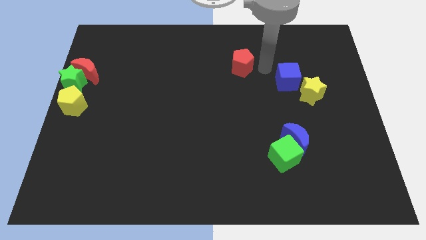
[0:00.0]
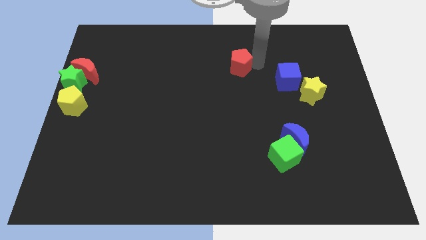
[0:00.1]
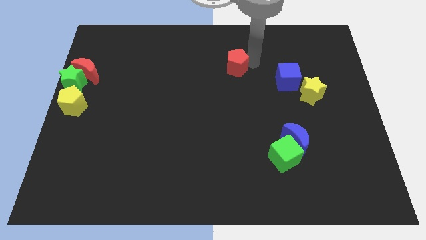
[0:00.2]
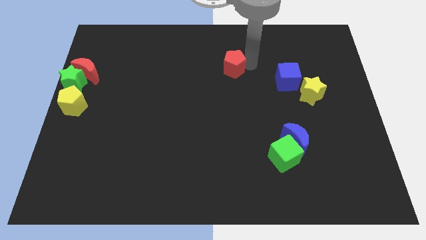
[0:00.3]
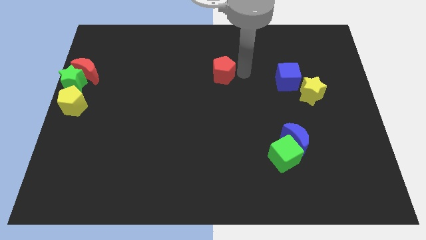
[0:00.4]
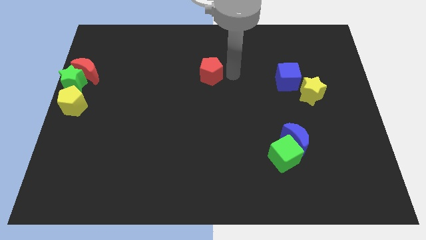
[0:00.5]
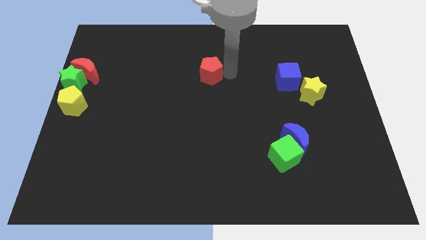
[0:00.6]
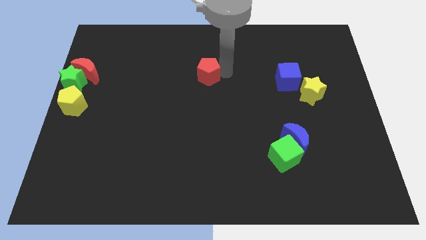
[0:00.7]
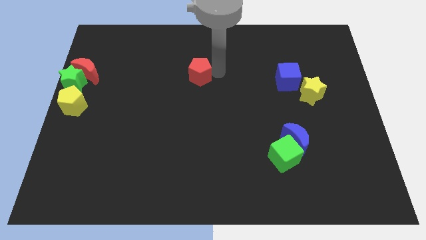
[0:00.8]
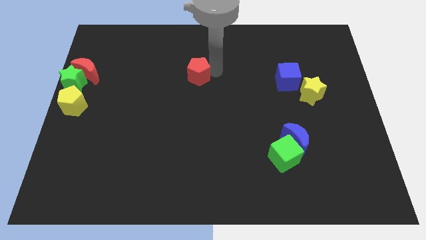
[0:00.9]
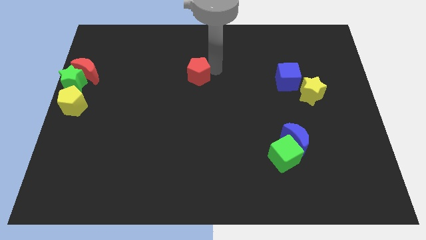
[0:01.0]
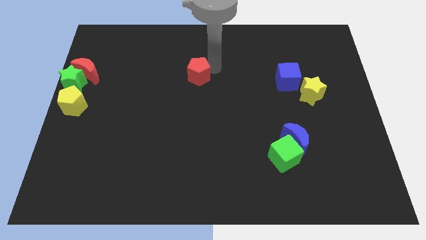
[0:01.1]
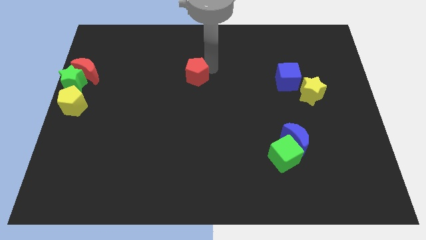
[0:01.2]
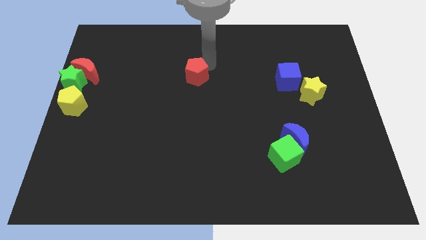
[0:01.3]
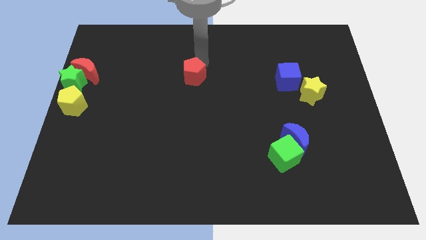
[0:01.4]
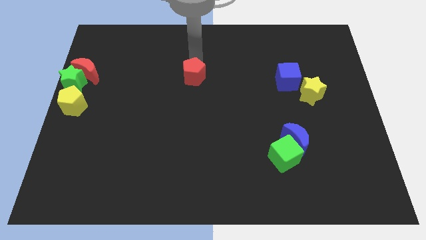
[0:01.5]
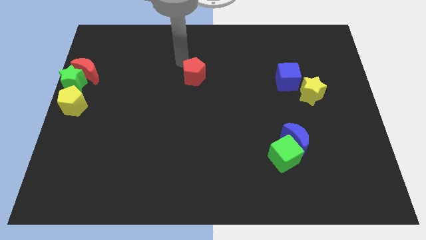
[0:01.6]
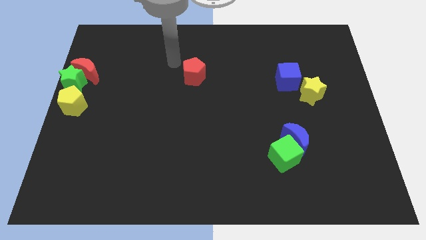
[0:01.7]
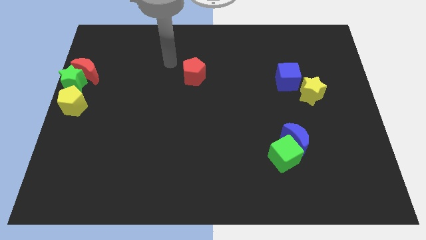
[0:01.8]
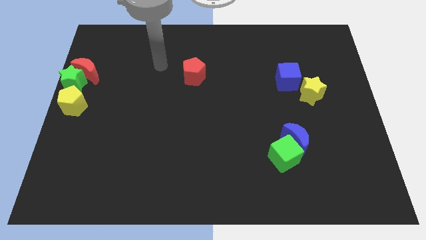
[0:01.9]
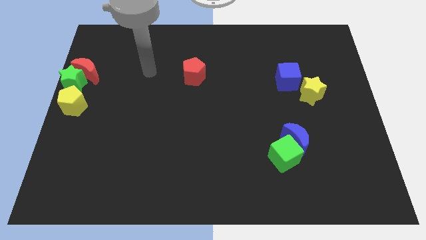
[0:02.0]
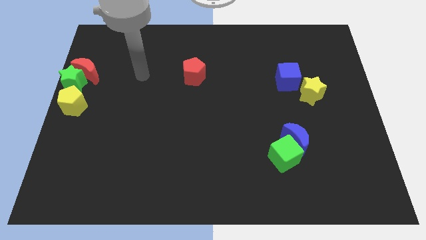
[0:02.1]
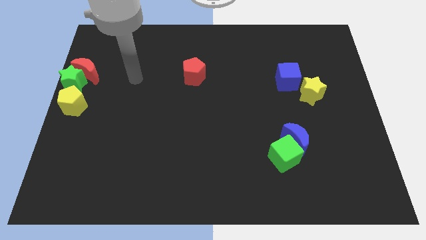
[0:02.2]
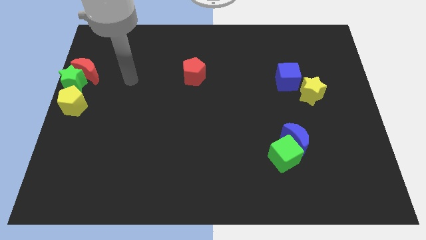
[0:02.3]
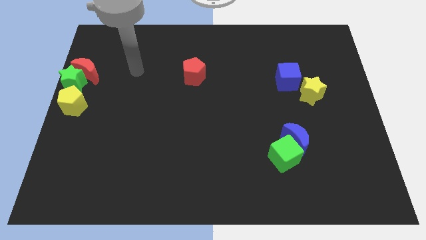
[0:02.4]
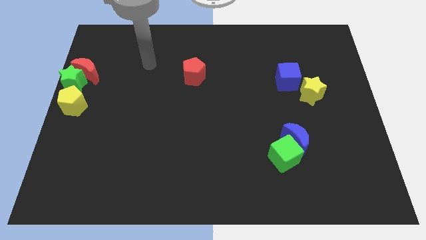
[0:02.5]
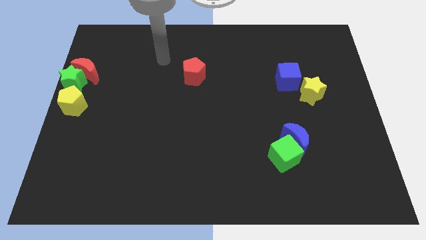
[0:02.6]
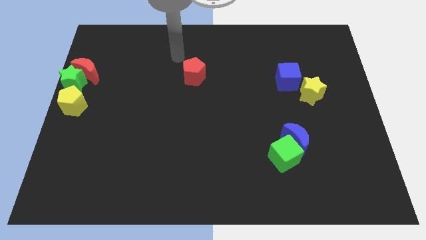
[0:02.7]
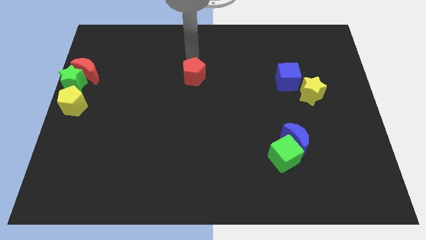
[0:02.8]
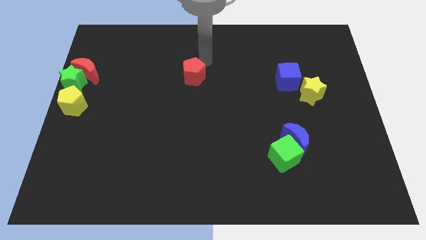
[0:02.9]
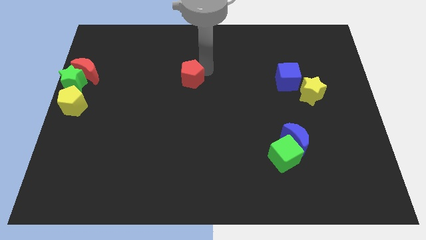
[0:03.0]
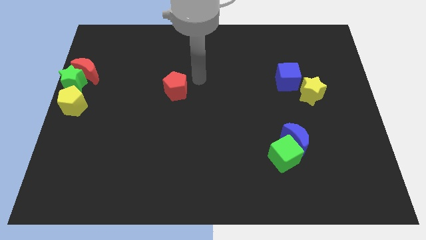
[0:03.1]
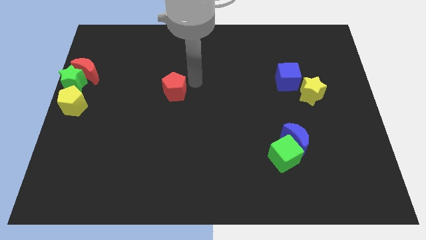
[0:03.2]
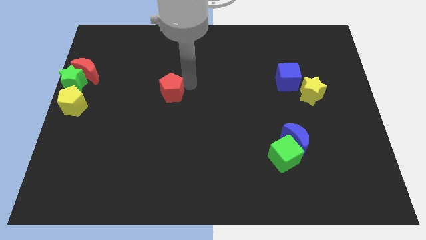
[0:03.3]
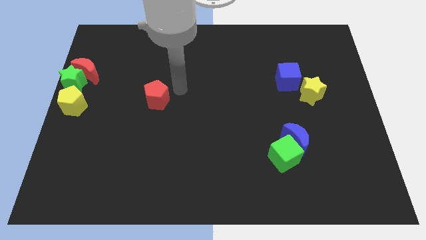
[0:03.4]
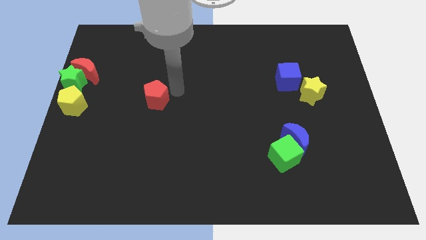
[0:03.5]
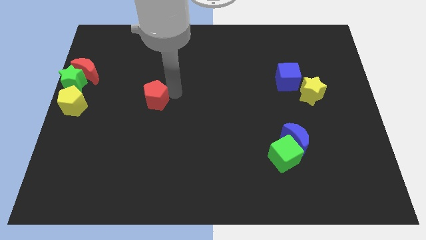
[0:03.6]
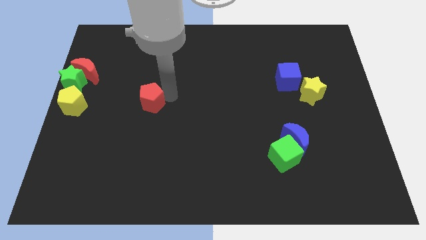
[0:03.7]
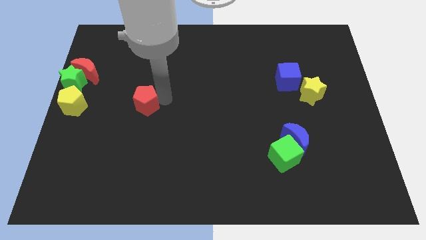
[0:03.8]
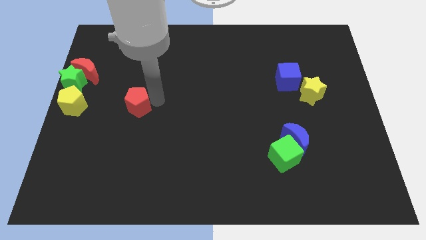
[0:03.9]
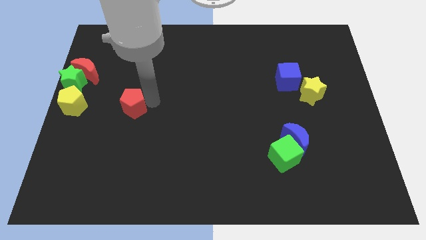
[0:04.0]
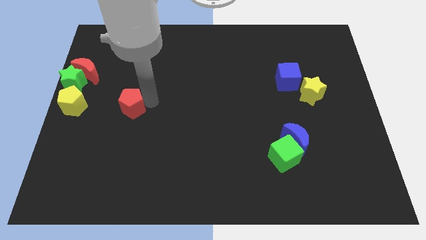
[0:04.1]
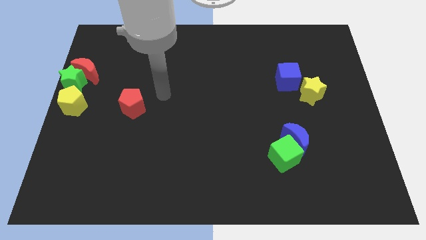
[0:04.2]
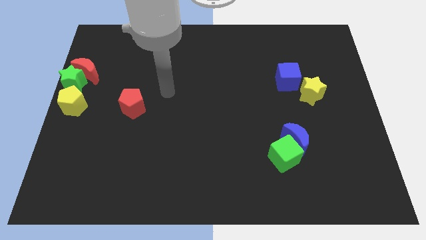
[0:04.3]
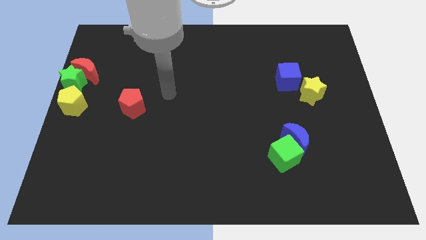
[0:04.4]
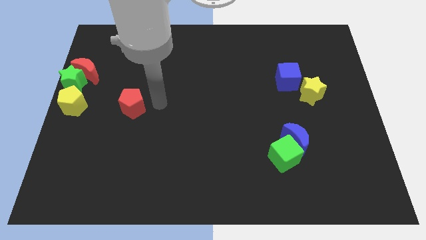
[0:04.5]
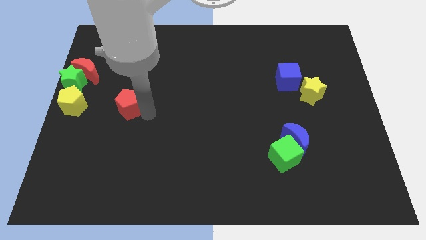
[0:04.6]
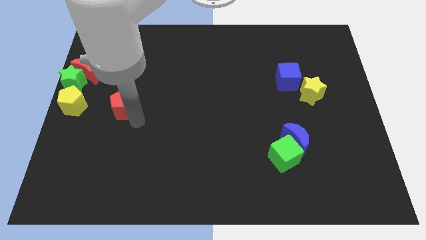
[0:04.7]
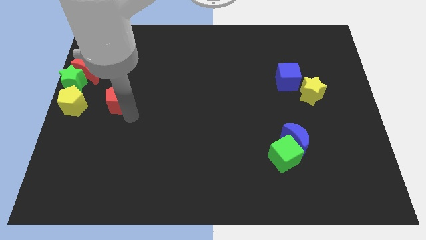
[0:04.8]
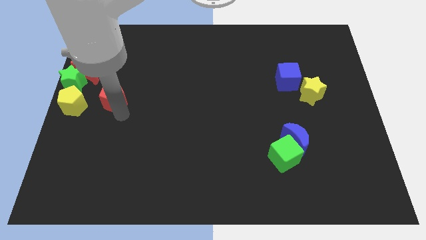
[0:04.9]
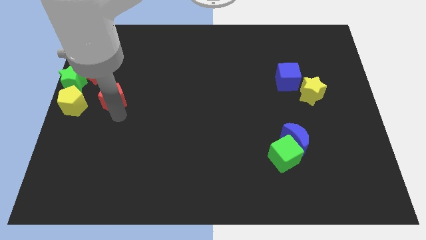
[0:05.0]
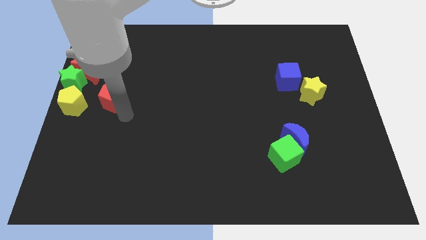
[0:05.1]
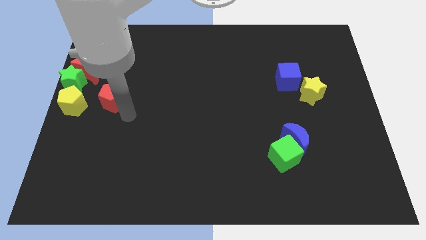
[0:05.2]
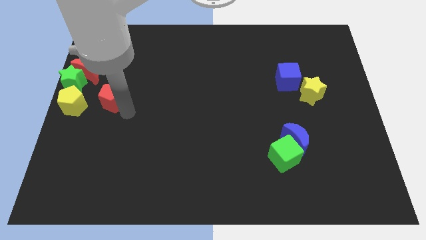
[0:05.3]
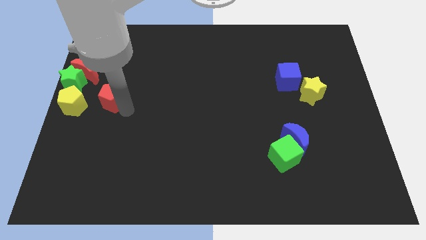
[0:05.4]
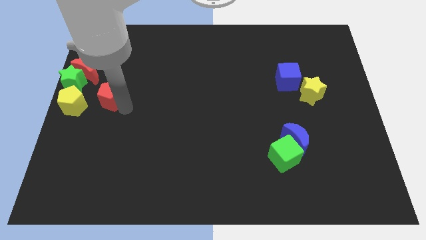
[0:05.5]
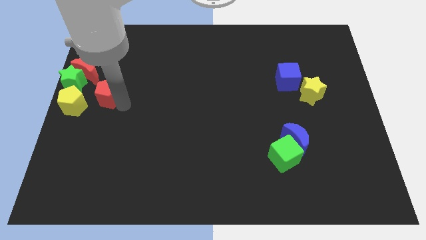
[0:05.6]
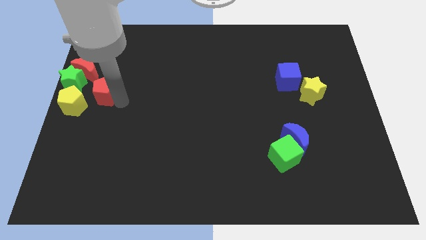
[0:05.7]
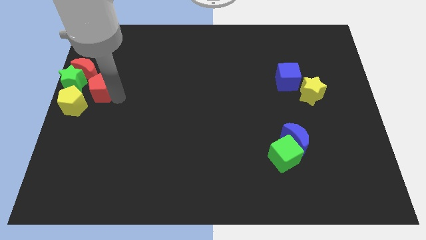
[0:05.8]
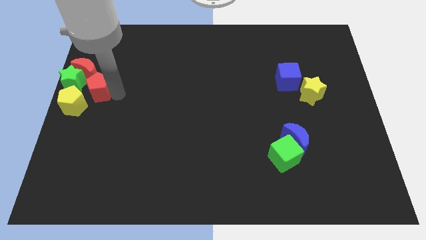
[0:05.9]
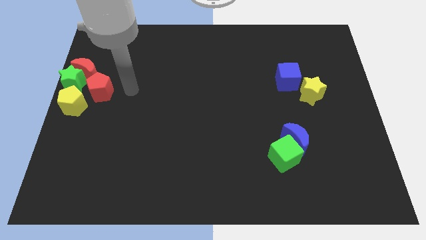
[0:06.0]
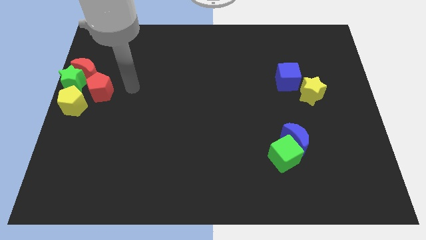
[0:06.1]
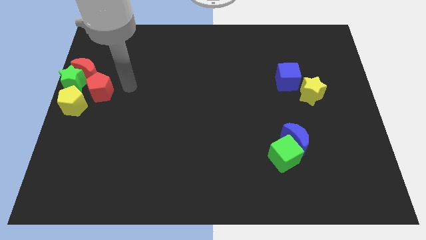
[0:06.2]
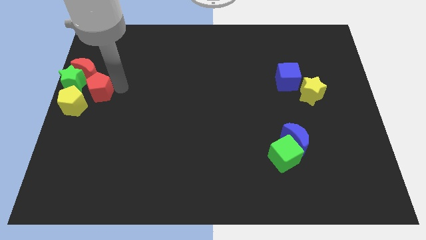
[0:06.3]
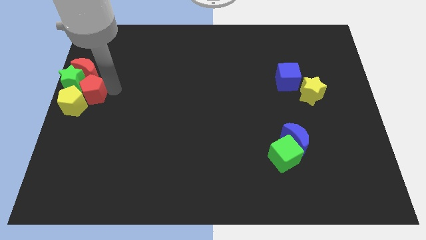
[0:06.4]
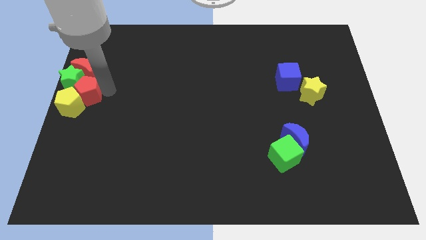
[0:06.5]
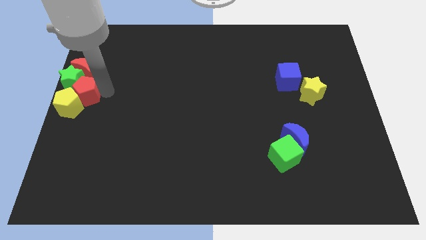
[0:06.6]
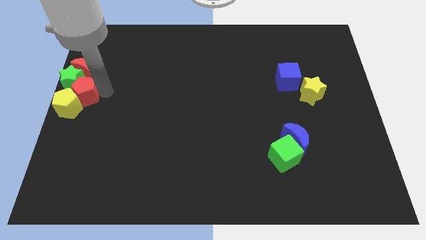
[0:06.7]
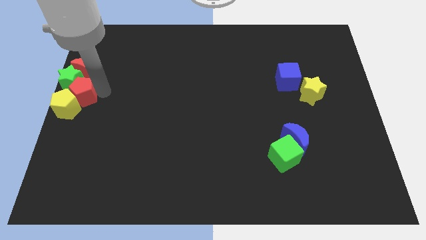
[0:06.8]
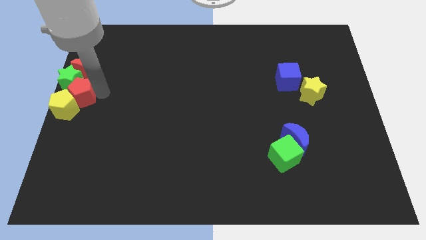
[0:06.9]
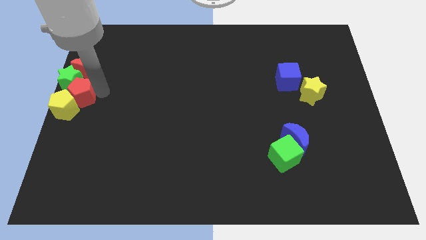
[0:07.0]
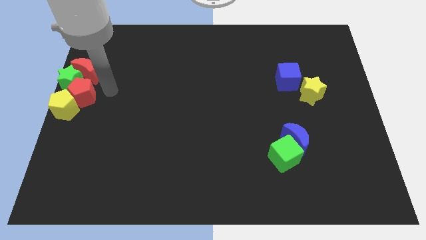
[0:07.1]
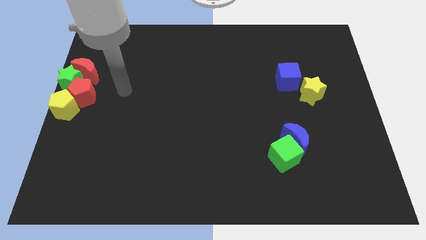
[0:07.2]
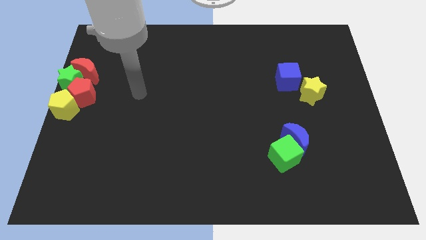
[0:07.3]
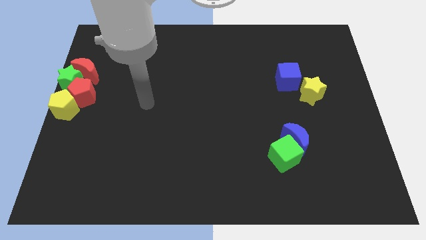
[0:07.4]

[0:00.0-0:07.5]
move the red pentagon into the group of blocks

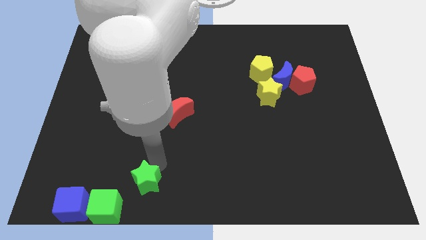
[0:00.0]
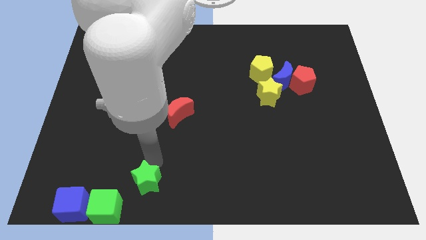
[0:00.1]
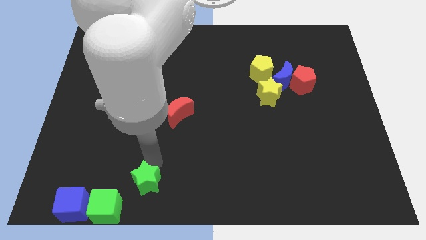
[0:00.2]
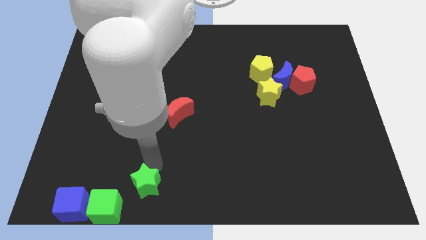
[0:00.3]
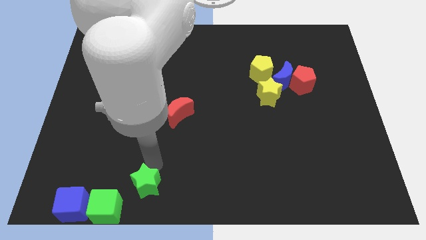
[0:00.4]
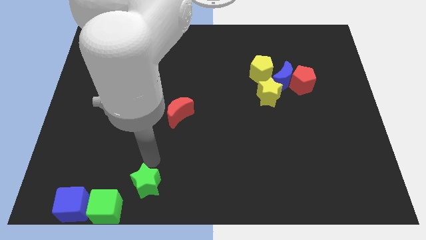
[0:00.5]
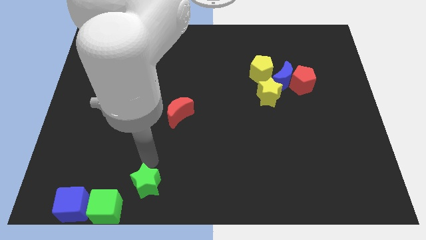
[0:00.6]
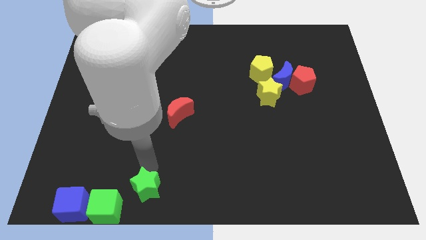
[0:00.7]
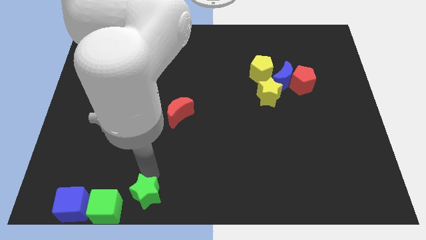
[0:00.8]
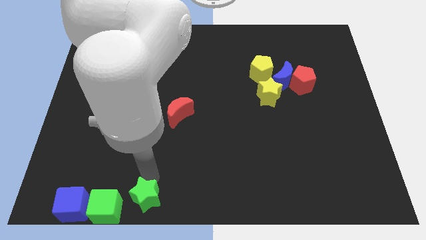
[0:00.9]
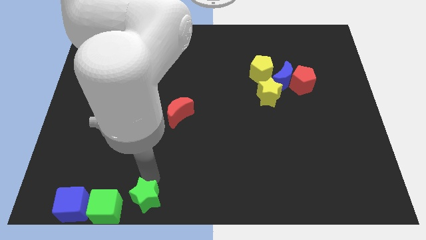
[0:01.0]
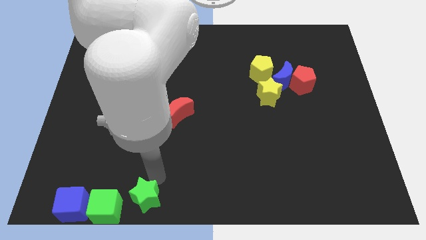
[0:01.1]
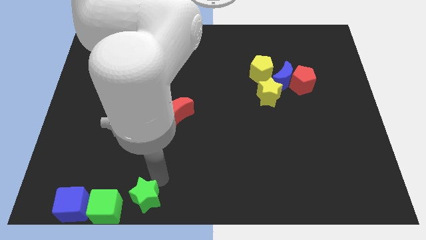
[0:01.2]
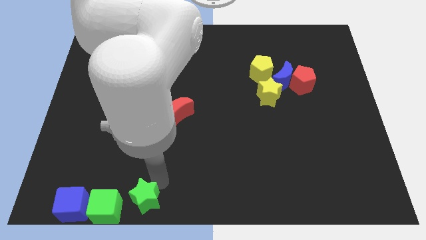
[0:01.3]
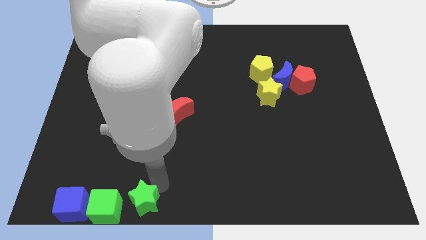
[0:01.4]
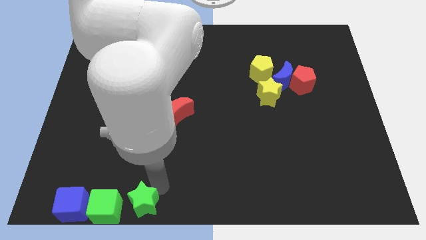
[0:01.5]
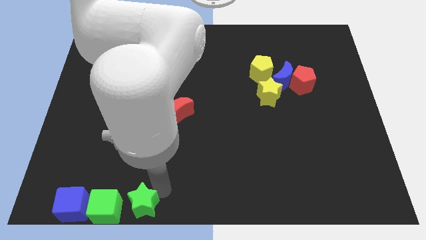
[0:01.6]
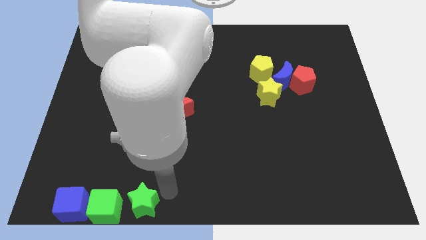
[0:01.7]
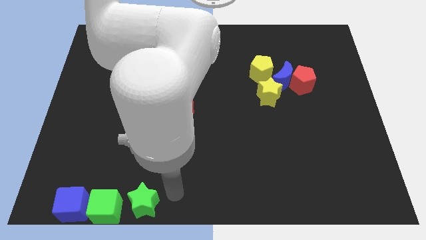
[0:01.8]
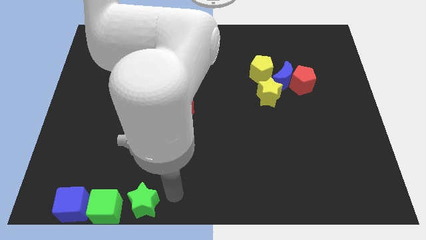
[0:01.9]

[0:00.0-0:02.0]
push the green star to the right of the green cube
